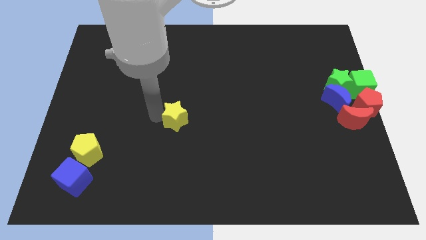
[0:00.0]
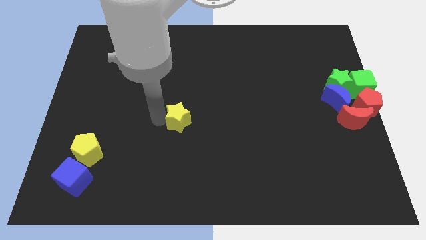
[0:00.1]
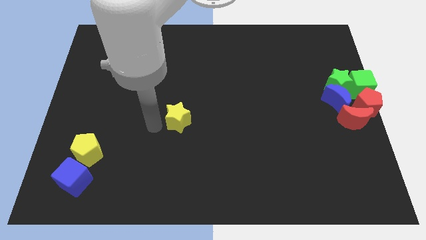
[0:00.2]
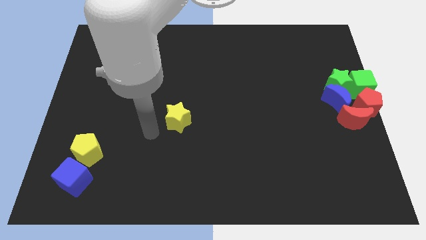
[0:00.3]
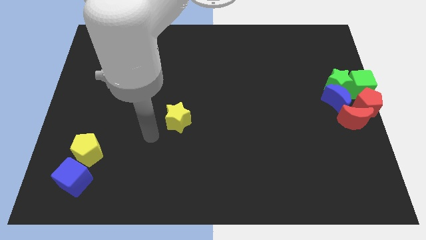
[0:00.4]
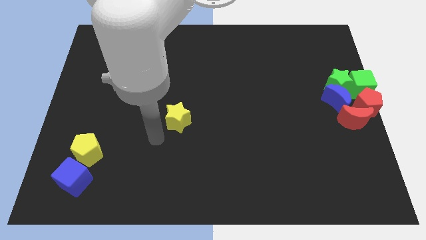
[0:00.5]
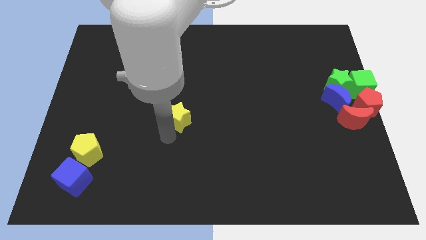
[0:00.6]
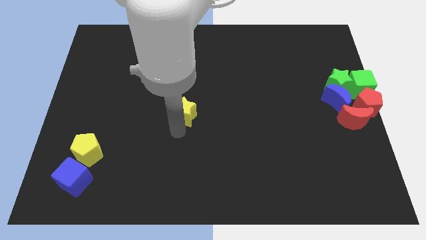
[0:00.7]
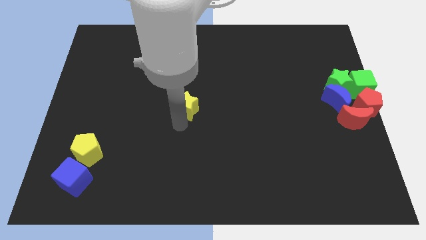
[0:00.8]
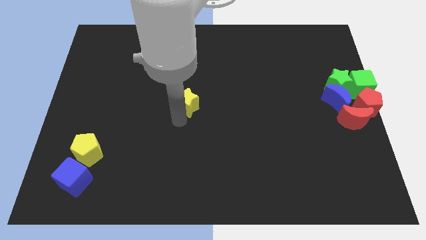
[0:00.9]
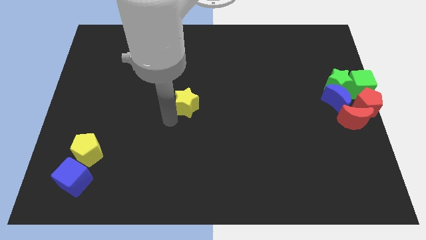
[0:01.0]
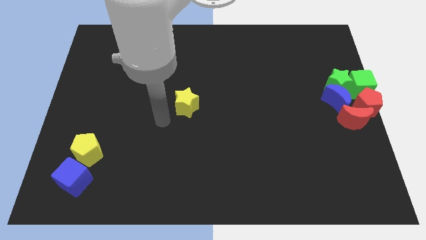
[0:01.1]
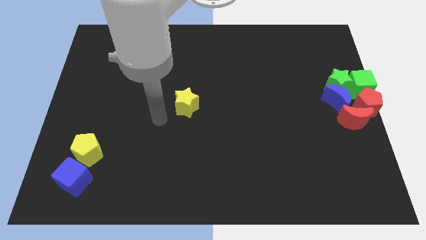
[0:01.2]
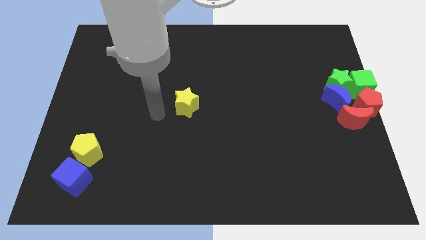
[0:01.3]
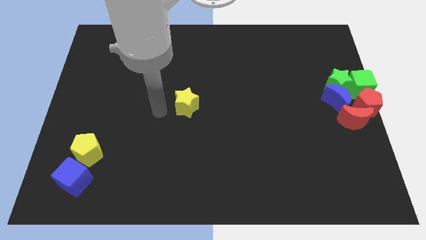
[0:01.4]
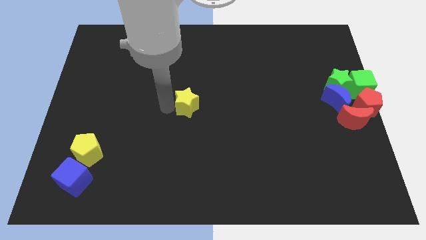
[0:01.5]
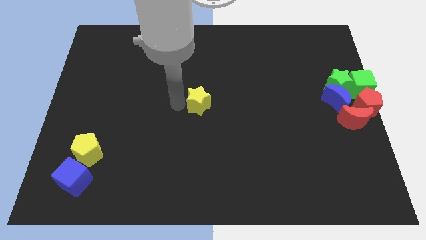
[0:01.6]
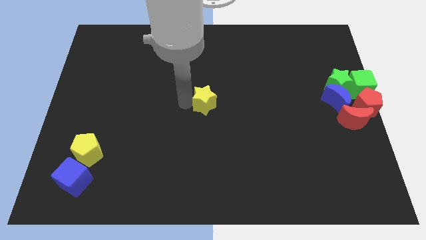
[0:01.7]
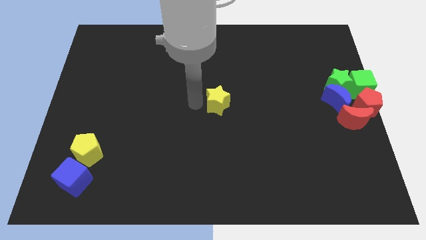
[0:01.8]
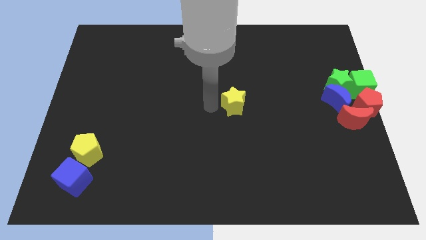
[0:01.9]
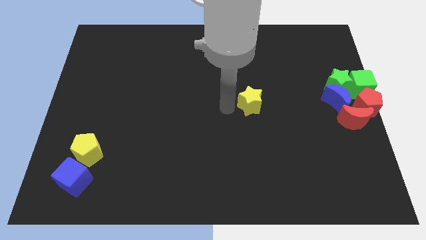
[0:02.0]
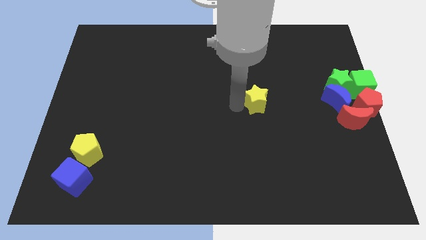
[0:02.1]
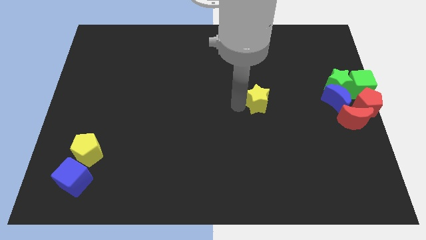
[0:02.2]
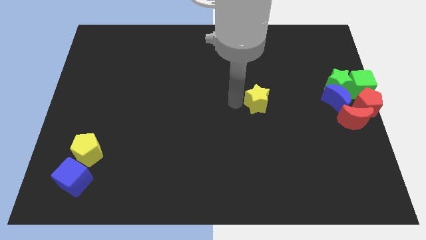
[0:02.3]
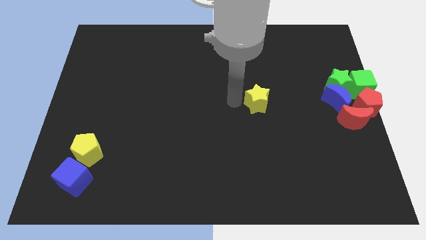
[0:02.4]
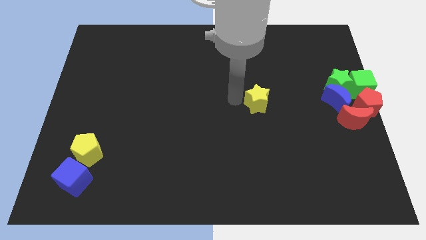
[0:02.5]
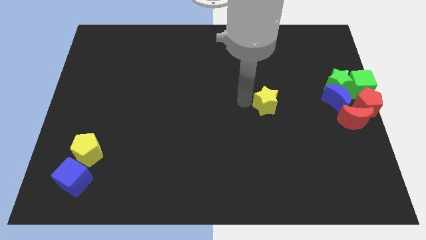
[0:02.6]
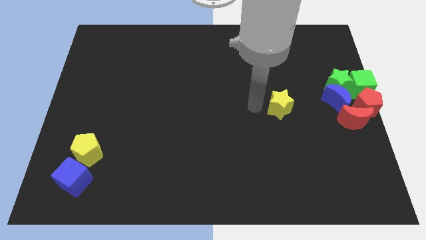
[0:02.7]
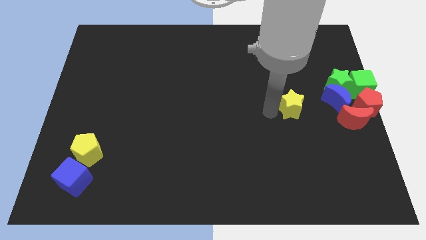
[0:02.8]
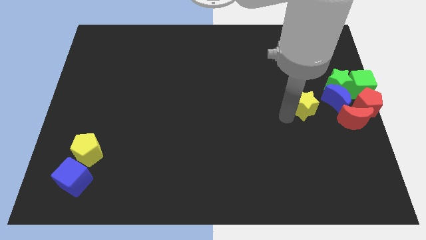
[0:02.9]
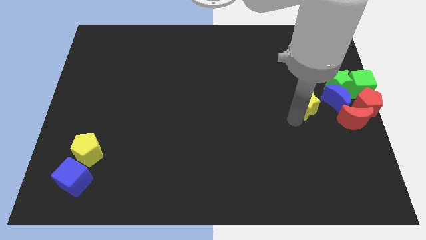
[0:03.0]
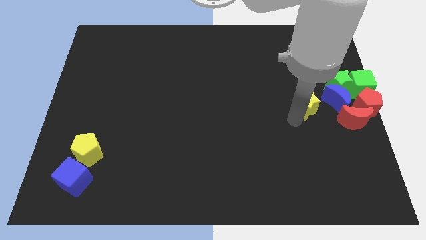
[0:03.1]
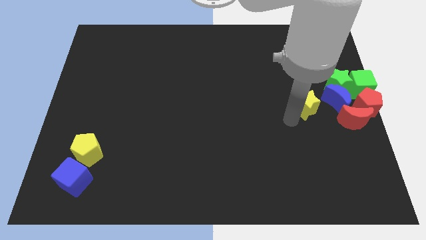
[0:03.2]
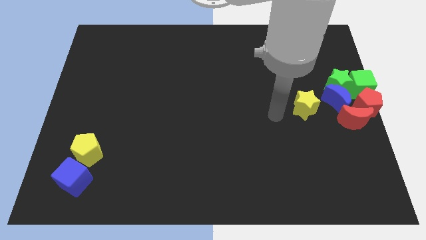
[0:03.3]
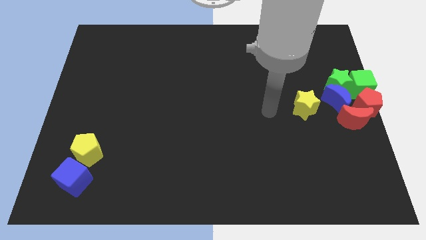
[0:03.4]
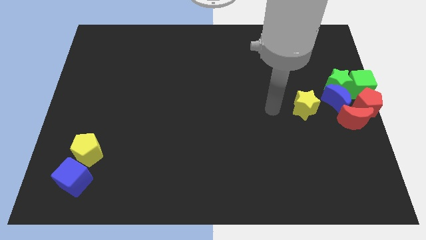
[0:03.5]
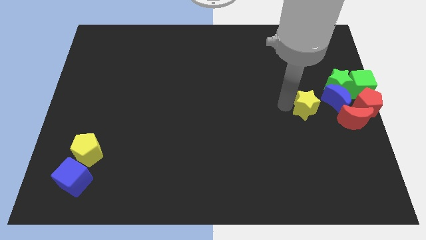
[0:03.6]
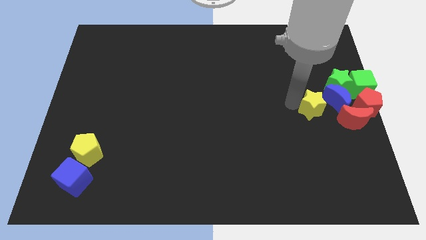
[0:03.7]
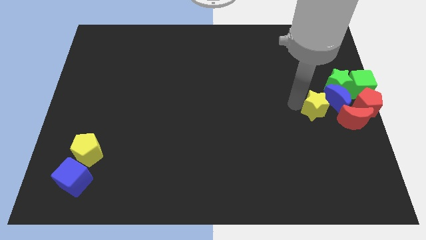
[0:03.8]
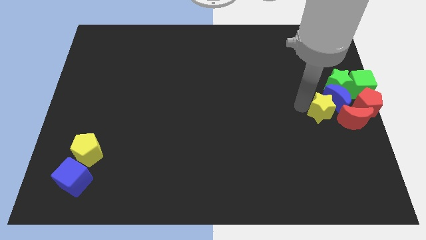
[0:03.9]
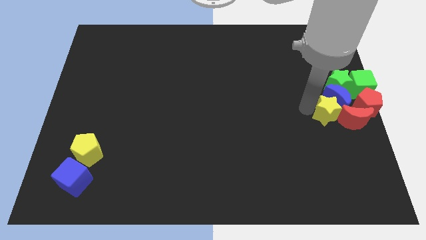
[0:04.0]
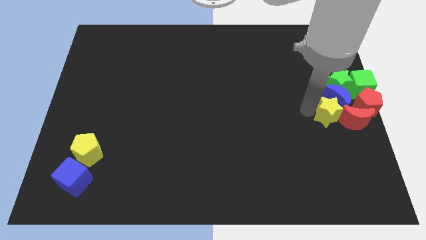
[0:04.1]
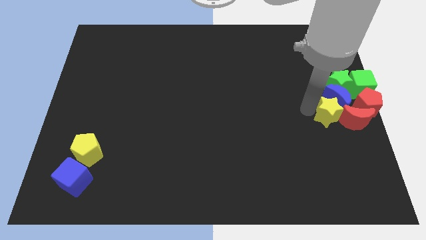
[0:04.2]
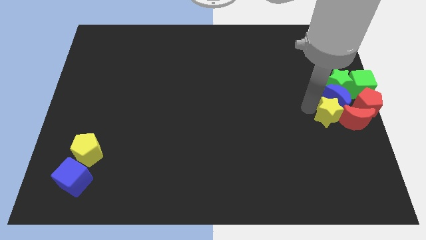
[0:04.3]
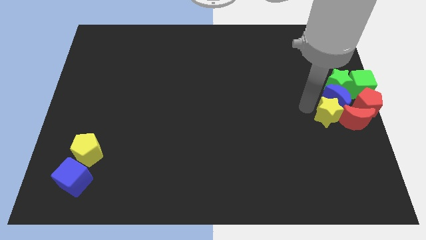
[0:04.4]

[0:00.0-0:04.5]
push the yellow star below the blue moon

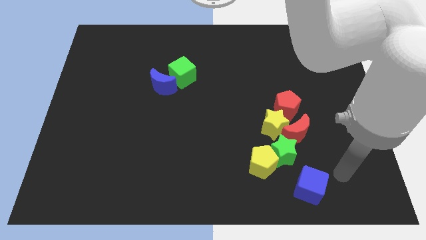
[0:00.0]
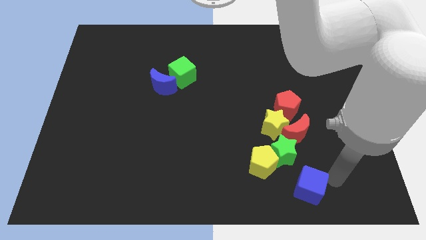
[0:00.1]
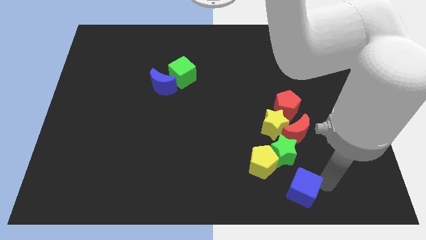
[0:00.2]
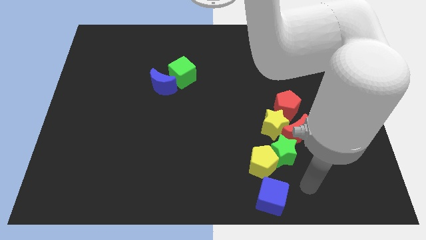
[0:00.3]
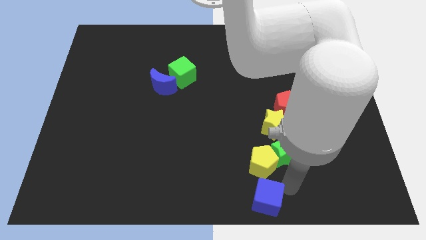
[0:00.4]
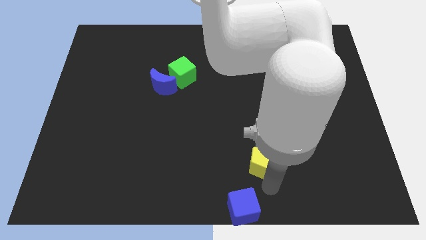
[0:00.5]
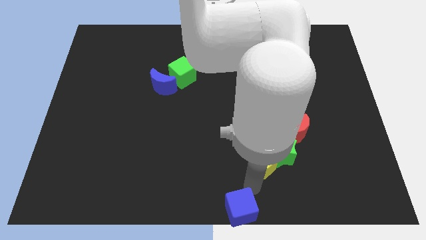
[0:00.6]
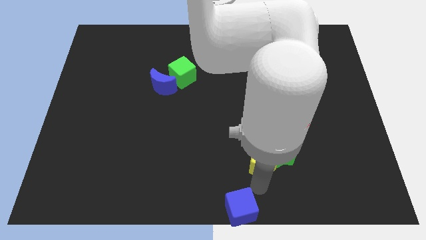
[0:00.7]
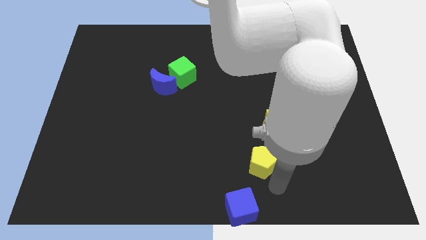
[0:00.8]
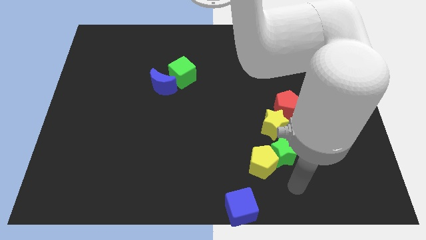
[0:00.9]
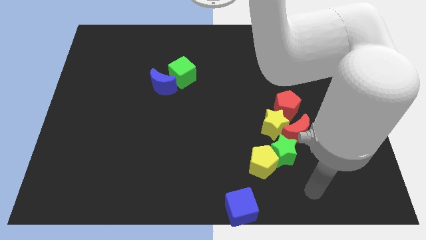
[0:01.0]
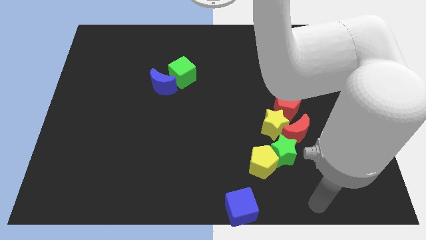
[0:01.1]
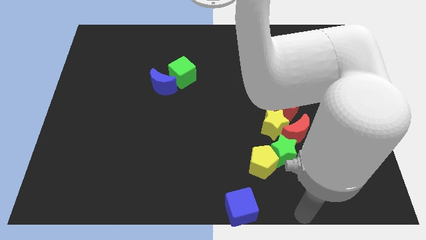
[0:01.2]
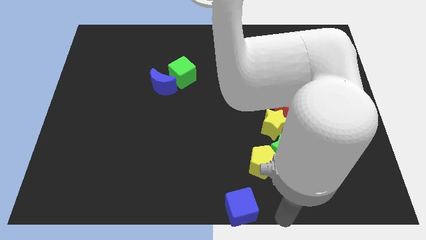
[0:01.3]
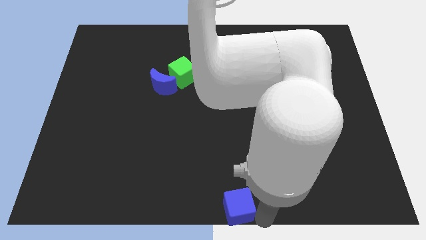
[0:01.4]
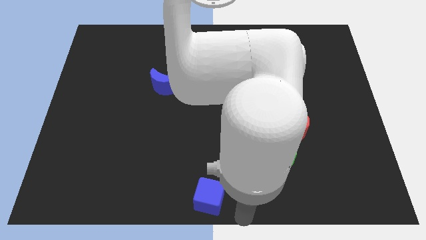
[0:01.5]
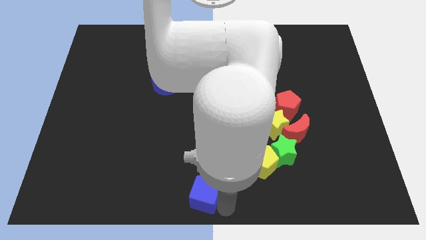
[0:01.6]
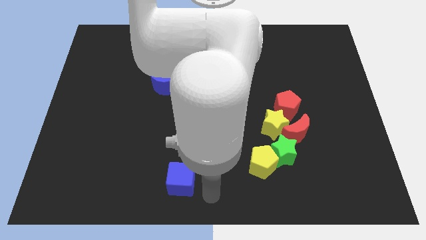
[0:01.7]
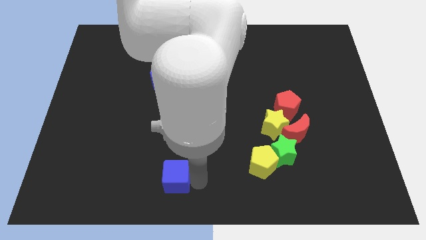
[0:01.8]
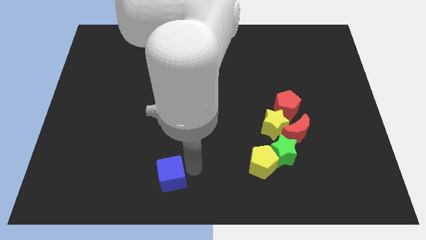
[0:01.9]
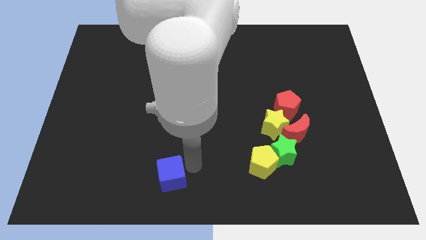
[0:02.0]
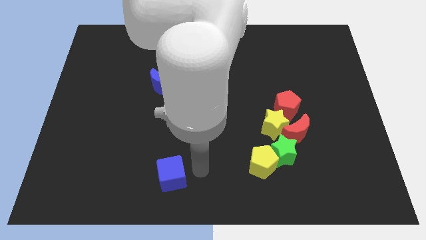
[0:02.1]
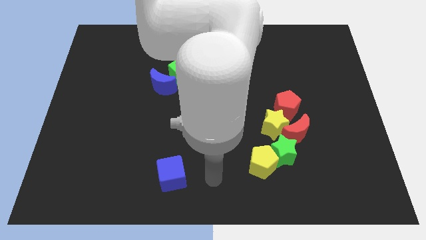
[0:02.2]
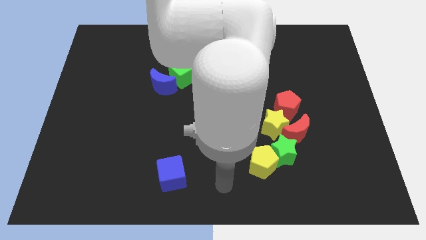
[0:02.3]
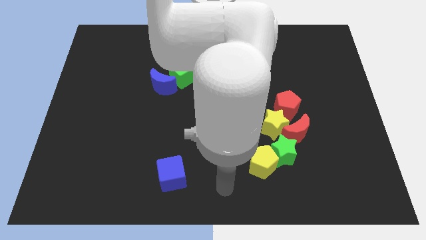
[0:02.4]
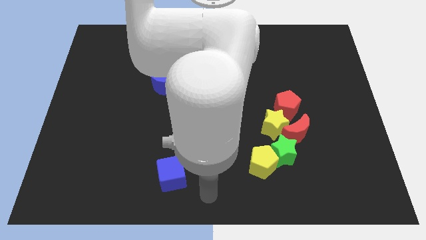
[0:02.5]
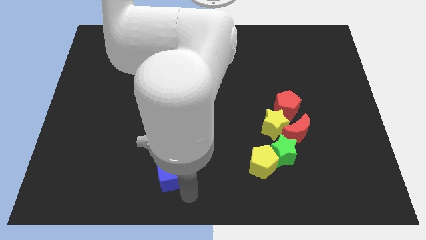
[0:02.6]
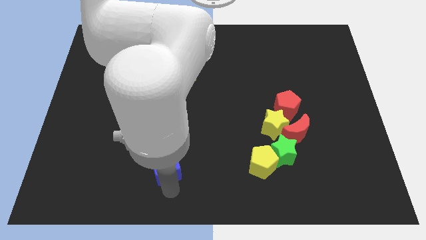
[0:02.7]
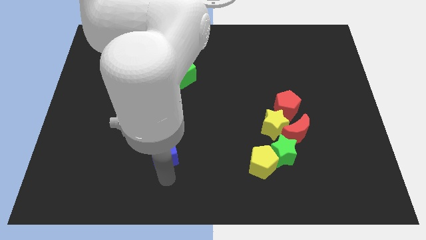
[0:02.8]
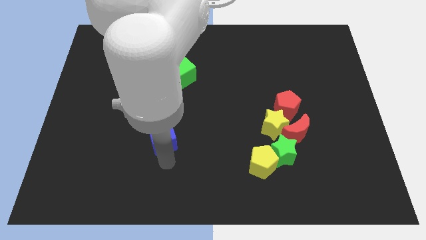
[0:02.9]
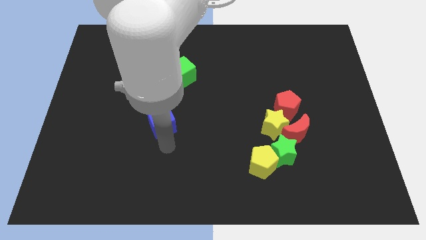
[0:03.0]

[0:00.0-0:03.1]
put blue cube parallel to yellow star

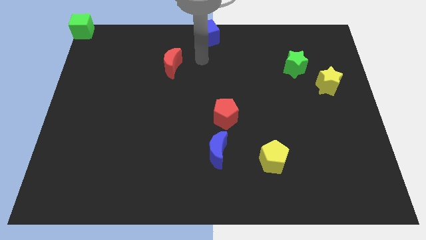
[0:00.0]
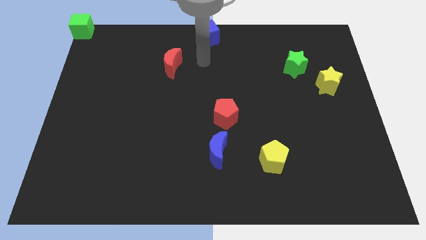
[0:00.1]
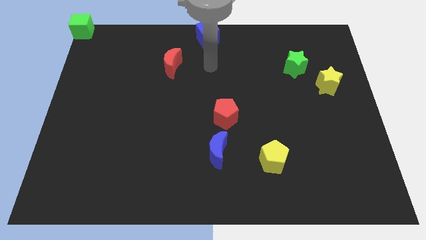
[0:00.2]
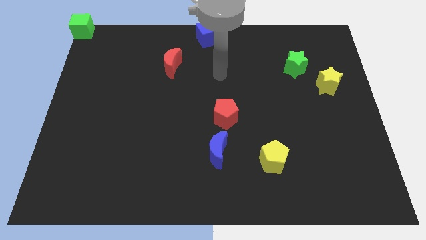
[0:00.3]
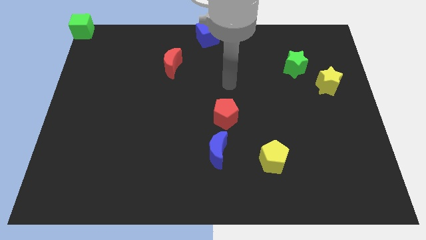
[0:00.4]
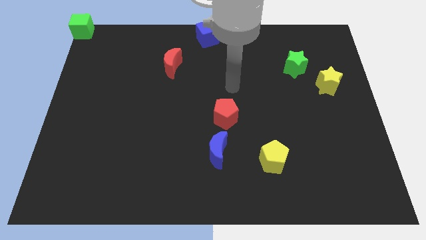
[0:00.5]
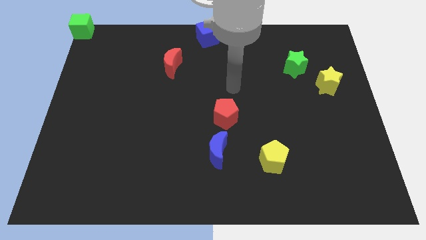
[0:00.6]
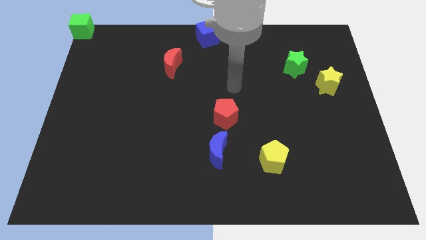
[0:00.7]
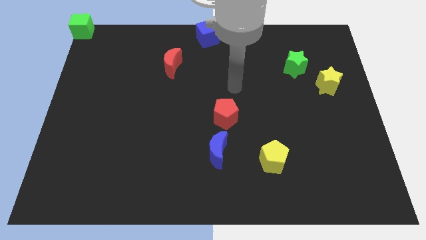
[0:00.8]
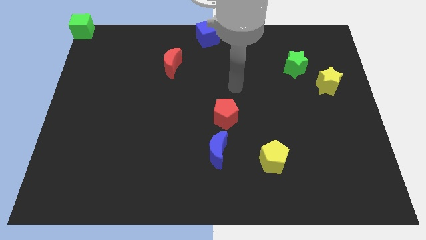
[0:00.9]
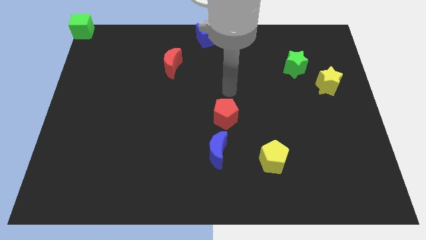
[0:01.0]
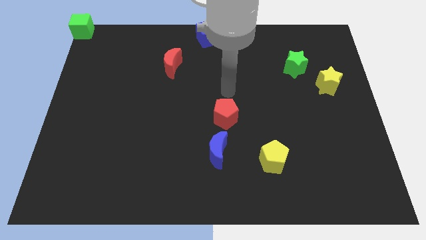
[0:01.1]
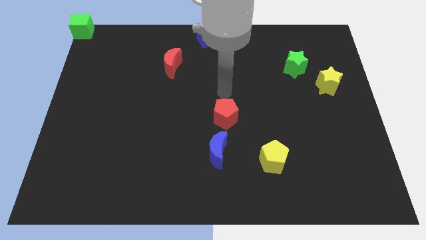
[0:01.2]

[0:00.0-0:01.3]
point your arm at the top of the red pentagon

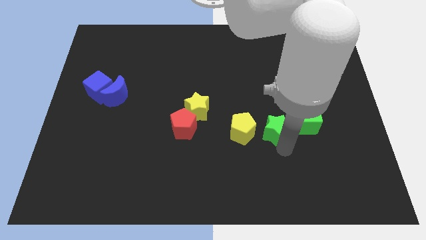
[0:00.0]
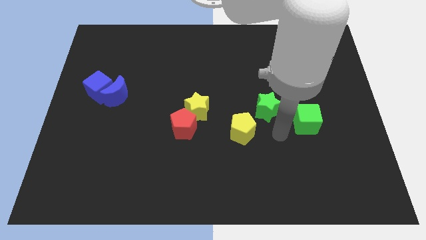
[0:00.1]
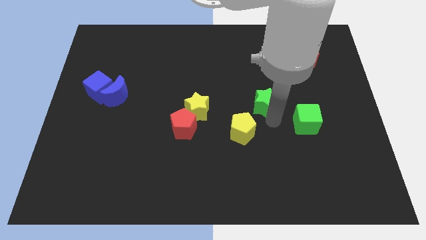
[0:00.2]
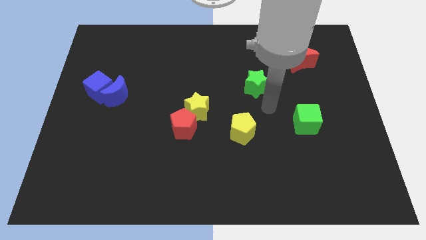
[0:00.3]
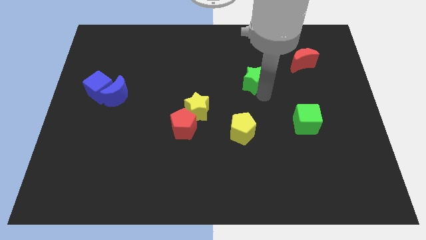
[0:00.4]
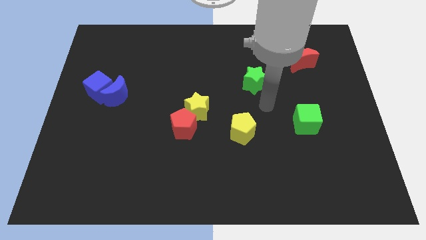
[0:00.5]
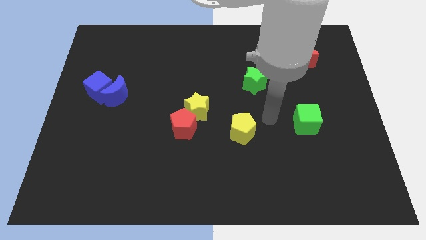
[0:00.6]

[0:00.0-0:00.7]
move the green star to the top of the board
